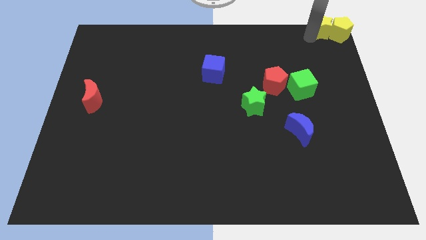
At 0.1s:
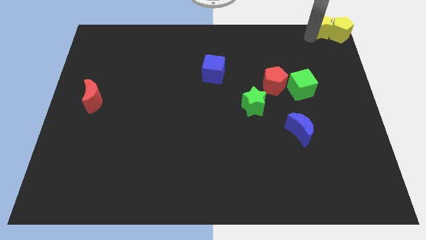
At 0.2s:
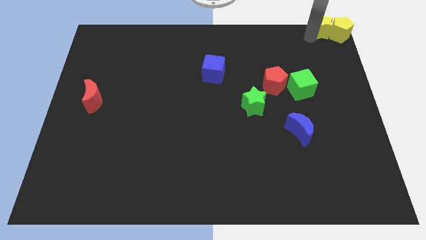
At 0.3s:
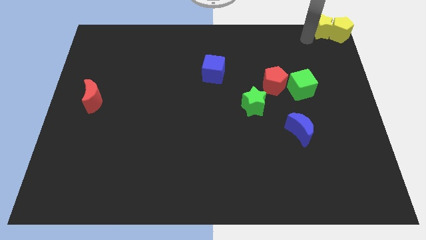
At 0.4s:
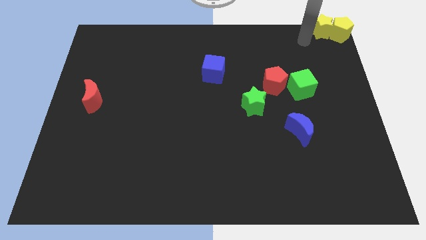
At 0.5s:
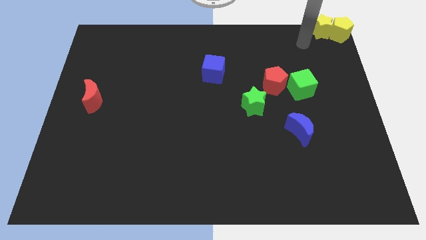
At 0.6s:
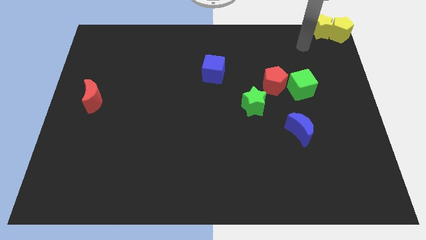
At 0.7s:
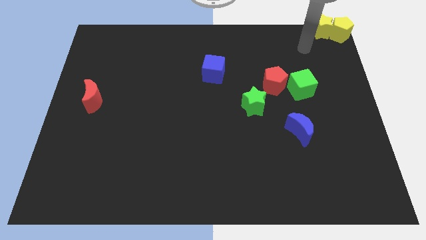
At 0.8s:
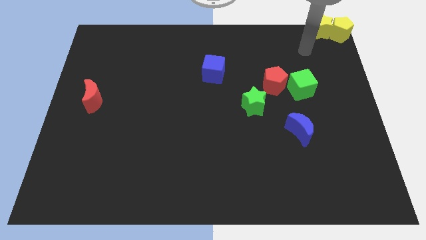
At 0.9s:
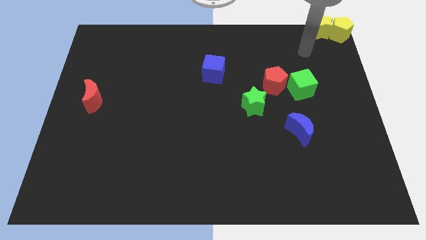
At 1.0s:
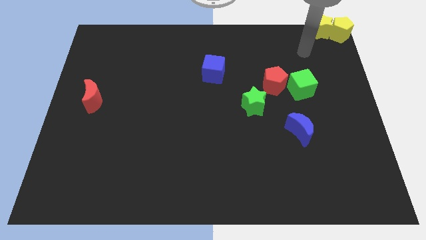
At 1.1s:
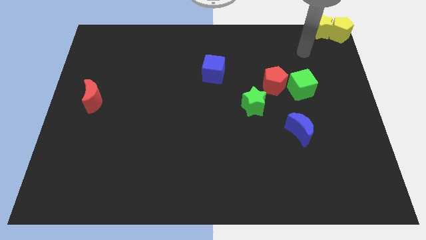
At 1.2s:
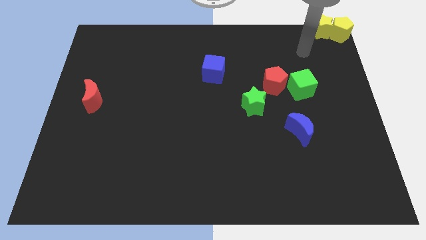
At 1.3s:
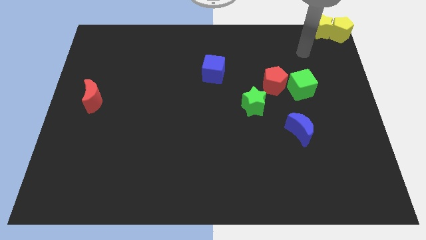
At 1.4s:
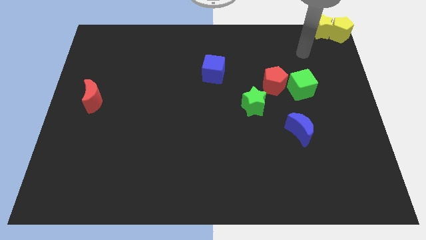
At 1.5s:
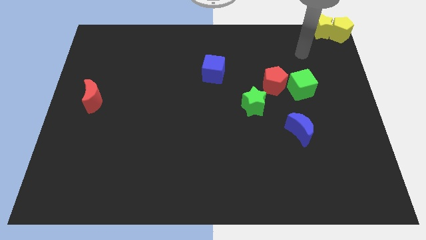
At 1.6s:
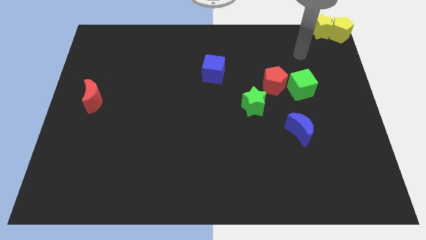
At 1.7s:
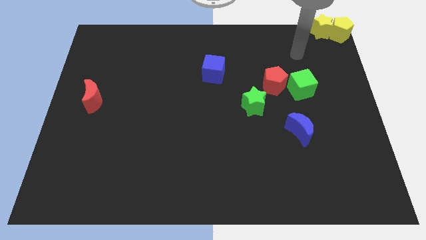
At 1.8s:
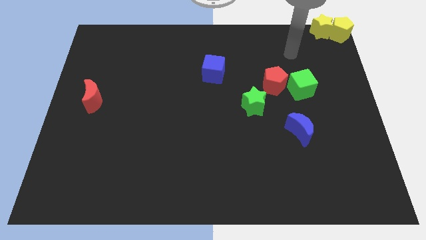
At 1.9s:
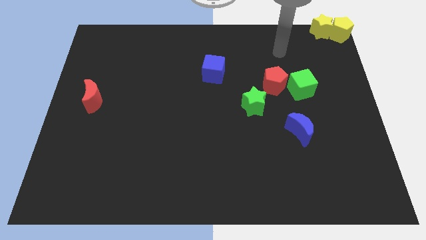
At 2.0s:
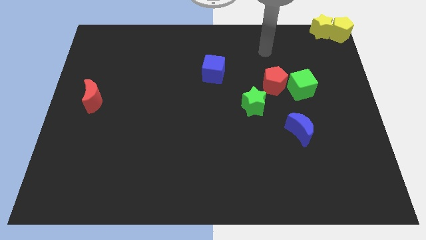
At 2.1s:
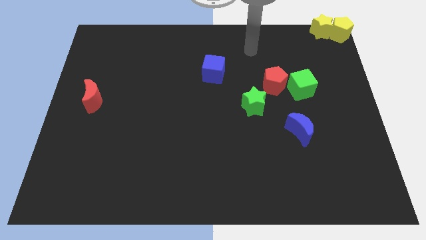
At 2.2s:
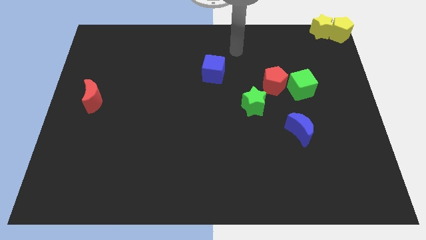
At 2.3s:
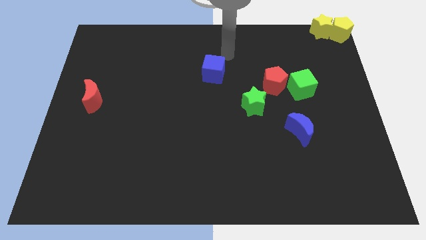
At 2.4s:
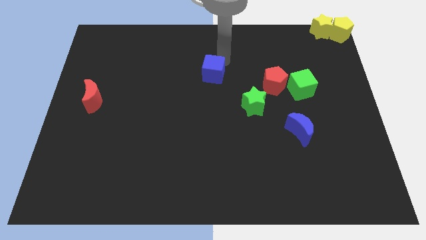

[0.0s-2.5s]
go away from the yellow pentagon

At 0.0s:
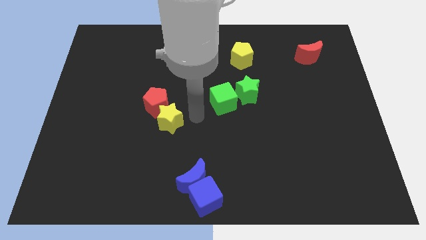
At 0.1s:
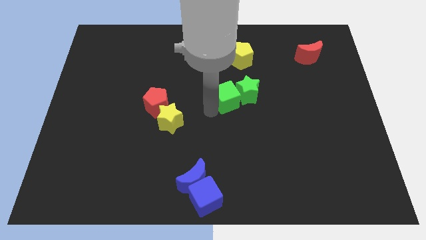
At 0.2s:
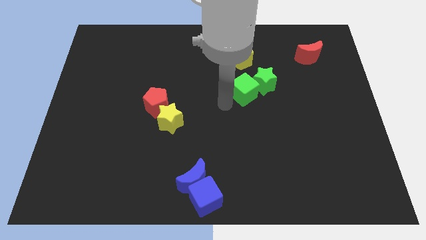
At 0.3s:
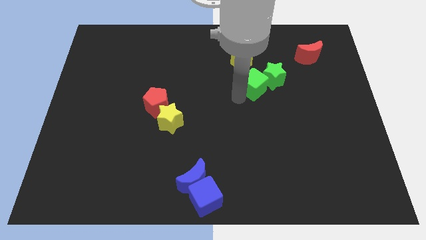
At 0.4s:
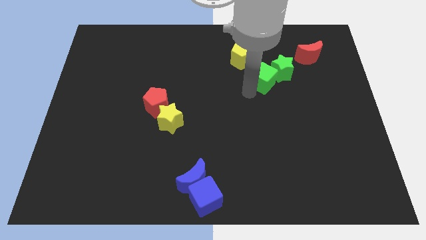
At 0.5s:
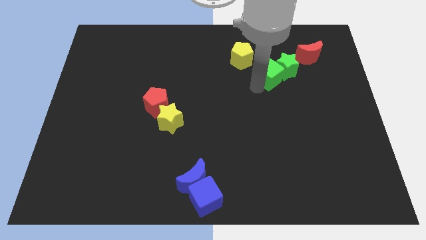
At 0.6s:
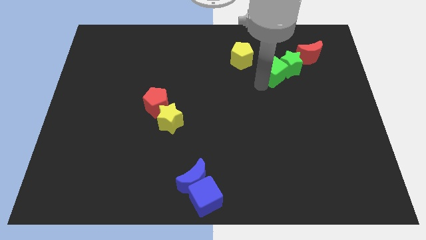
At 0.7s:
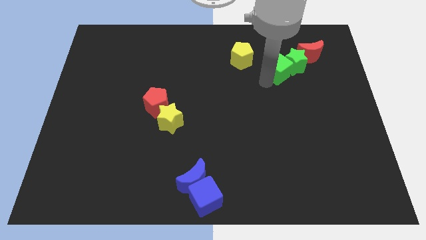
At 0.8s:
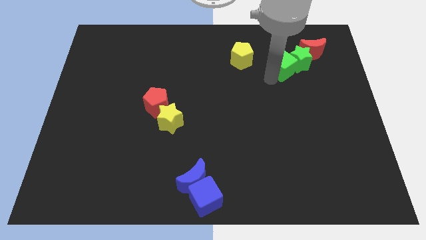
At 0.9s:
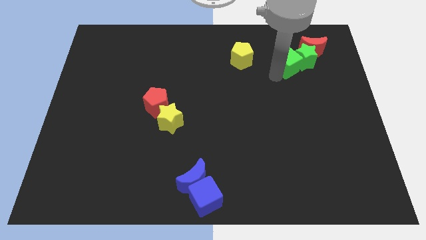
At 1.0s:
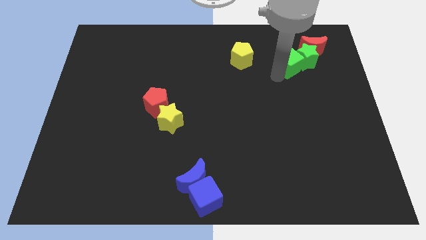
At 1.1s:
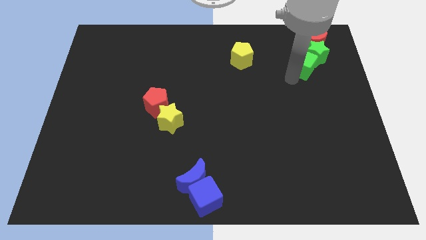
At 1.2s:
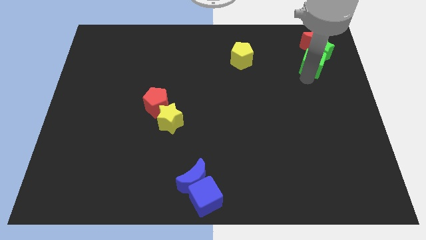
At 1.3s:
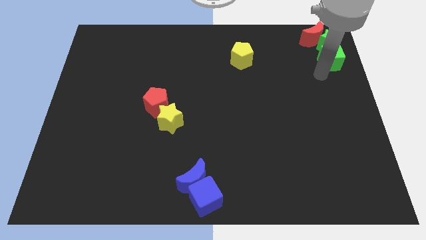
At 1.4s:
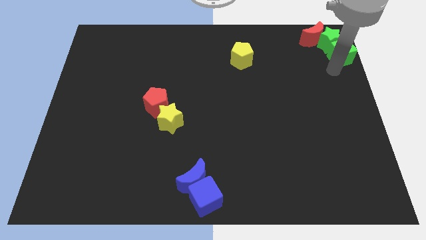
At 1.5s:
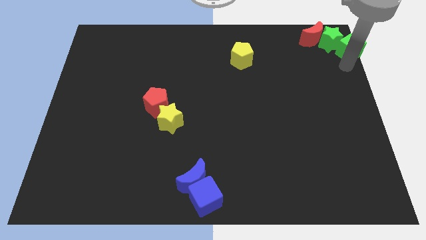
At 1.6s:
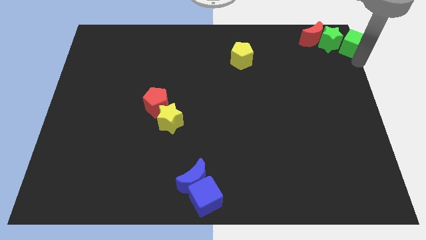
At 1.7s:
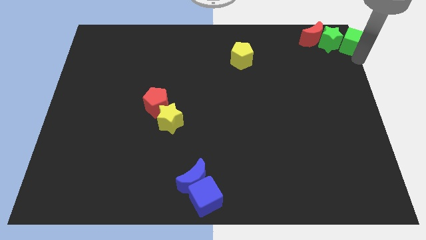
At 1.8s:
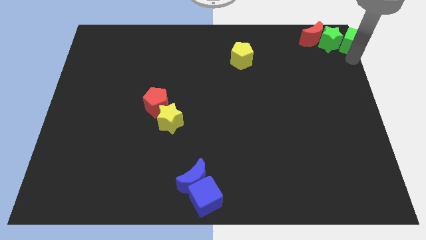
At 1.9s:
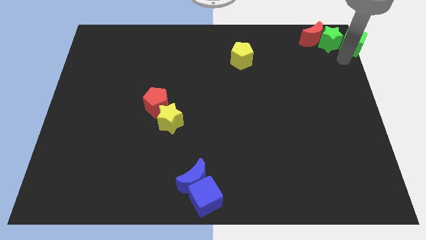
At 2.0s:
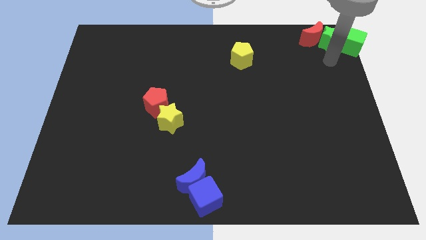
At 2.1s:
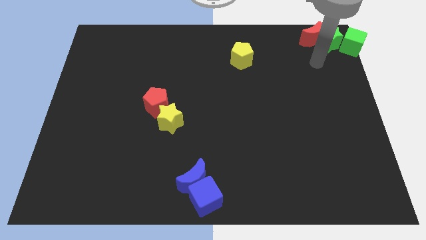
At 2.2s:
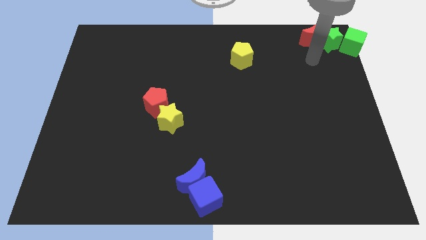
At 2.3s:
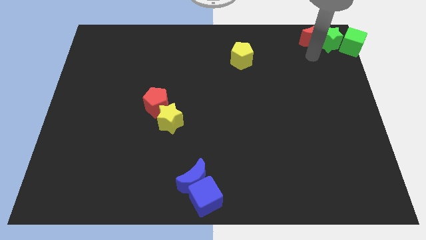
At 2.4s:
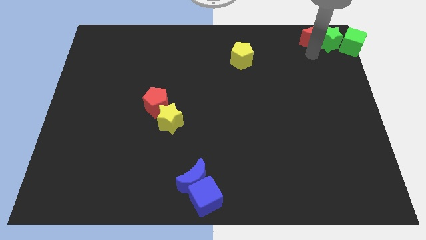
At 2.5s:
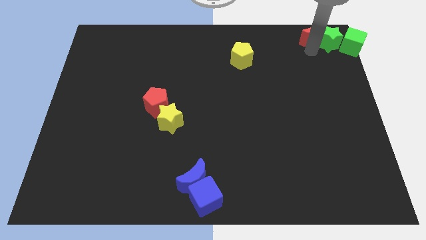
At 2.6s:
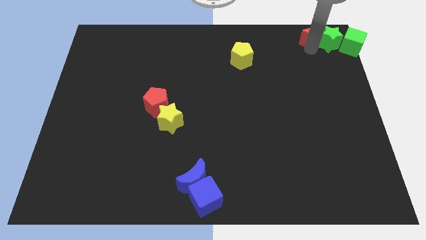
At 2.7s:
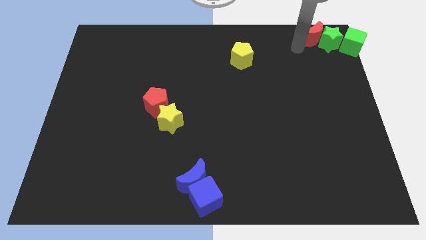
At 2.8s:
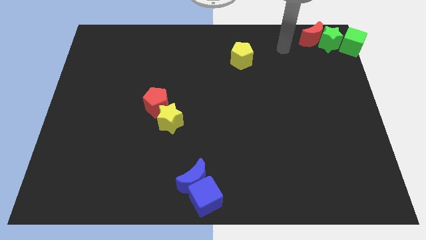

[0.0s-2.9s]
push the green cube and green star to the top right corner of the board

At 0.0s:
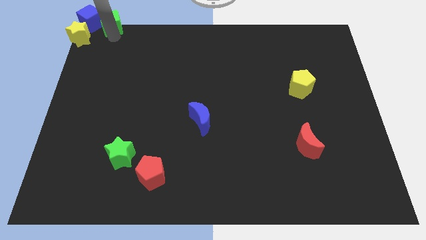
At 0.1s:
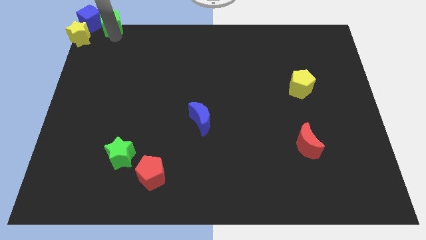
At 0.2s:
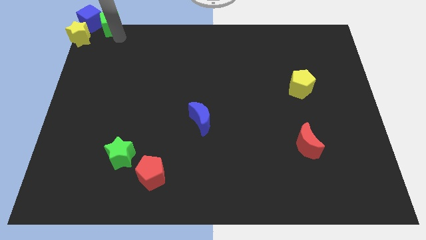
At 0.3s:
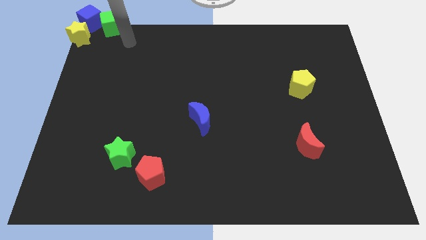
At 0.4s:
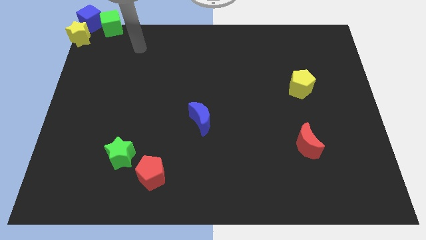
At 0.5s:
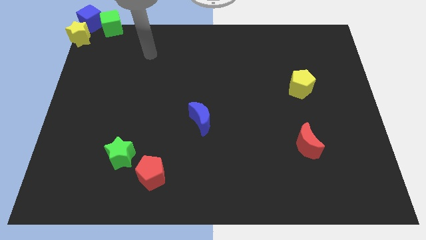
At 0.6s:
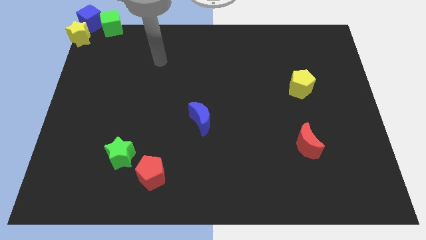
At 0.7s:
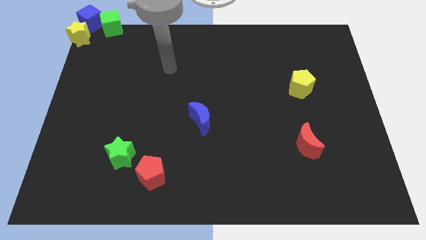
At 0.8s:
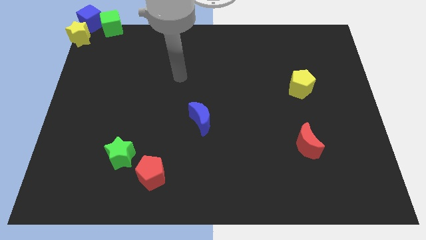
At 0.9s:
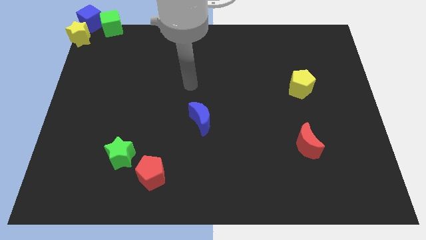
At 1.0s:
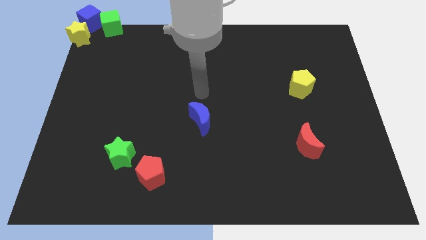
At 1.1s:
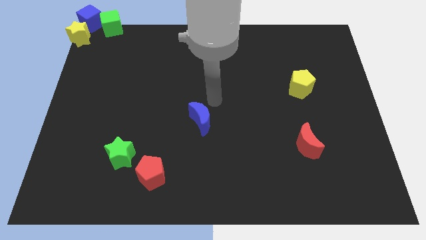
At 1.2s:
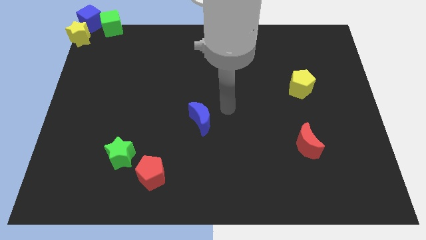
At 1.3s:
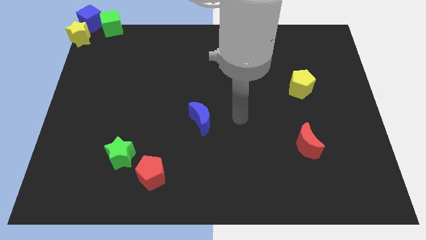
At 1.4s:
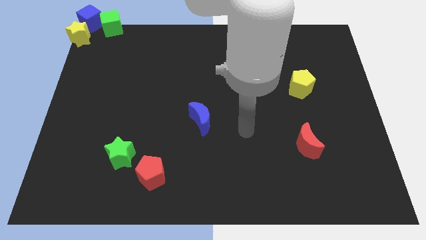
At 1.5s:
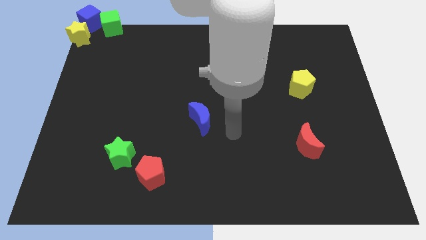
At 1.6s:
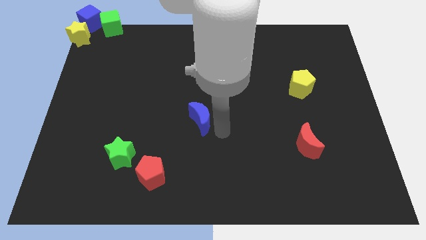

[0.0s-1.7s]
point your arm to the right of blue crescent

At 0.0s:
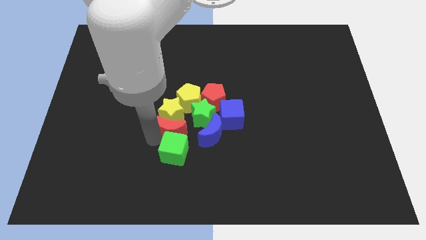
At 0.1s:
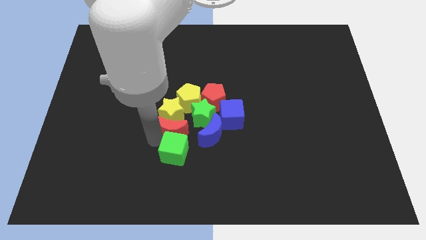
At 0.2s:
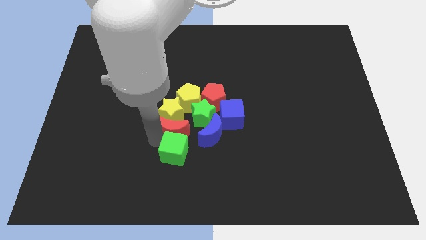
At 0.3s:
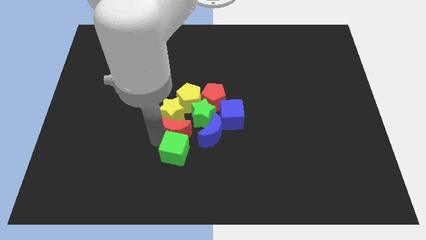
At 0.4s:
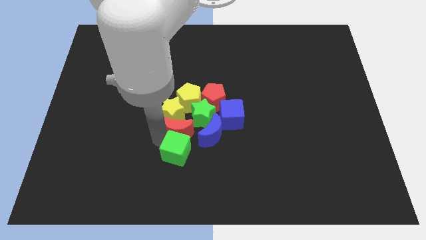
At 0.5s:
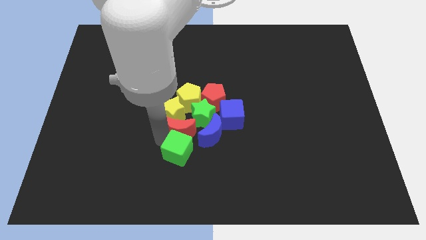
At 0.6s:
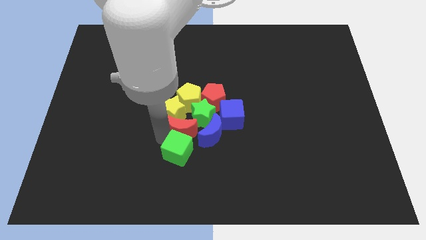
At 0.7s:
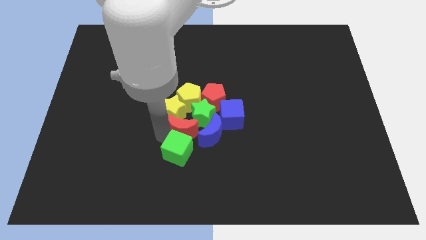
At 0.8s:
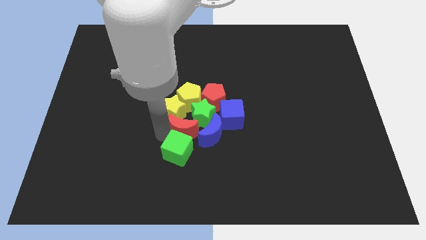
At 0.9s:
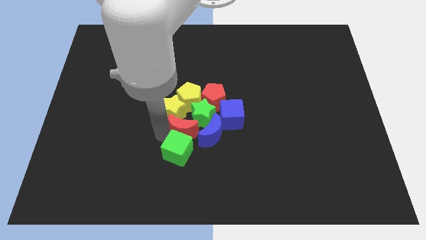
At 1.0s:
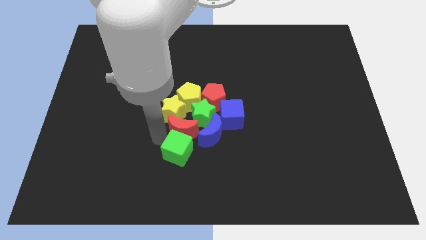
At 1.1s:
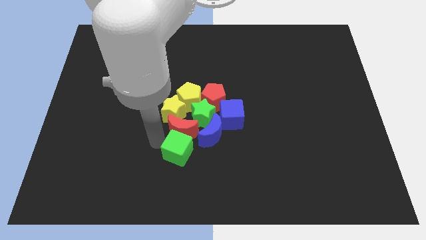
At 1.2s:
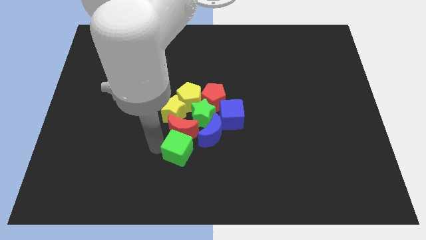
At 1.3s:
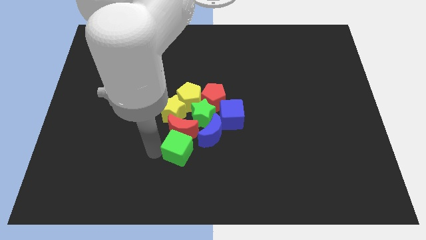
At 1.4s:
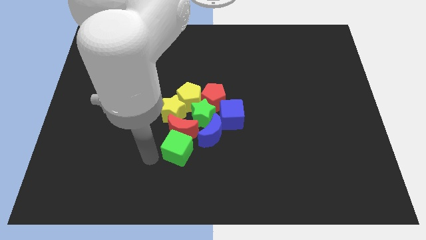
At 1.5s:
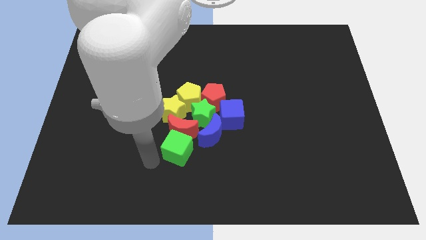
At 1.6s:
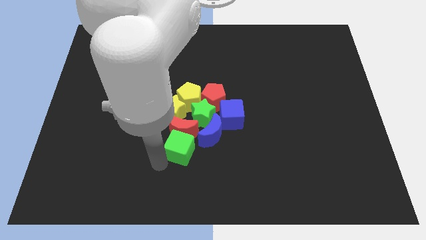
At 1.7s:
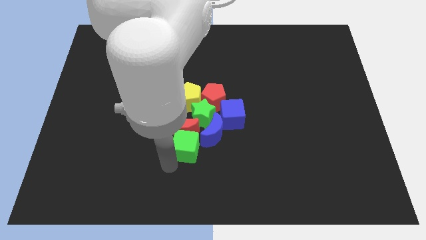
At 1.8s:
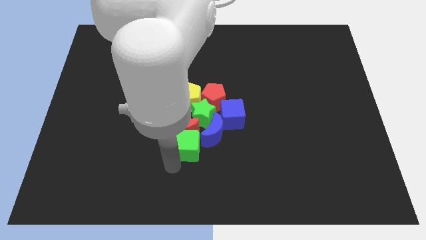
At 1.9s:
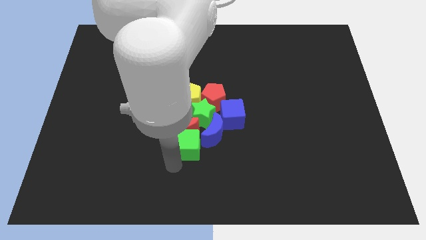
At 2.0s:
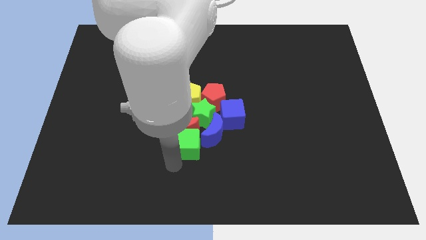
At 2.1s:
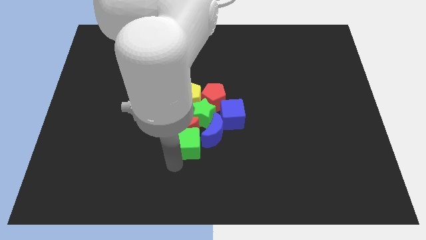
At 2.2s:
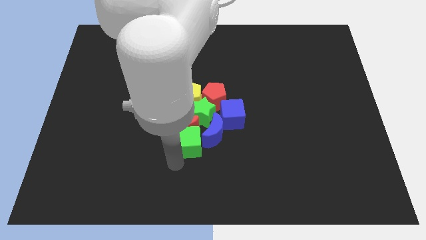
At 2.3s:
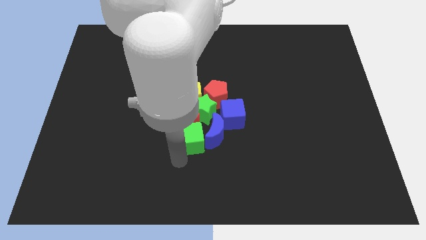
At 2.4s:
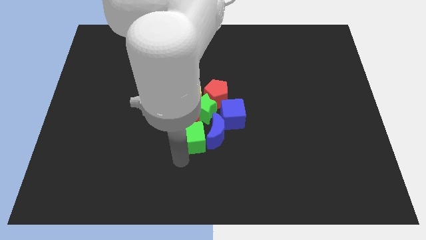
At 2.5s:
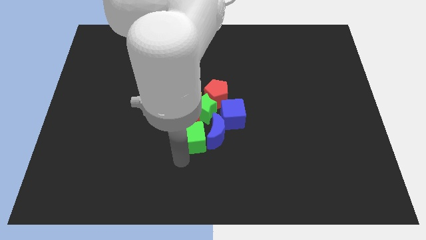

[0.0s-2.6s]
push the red moon and green cube into the group of all blocks
